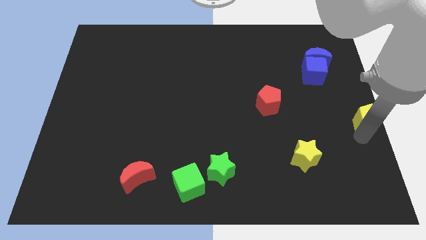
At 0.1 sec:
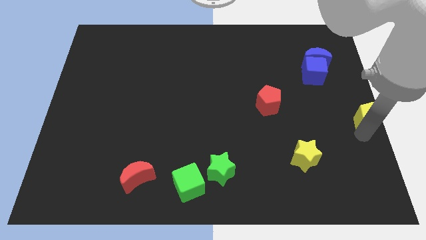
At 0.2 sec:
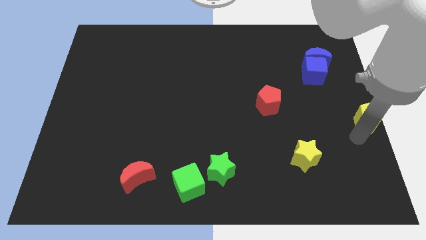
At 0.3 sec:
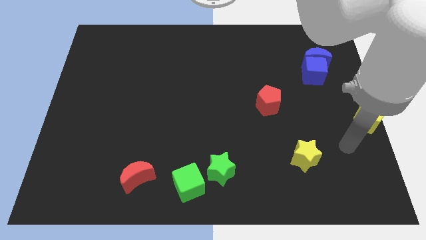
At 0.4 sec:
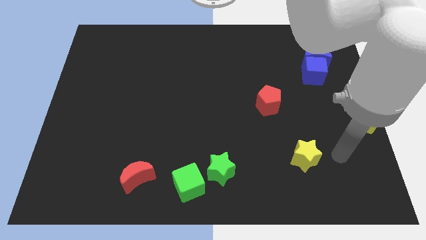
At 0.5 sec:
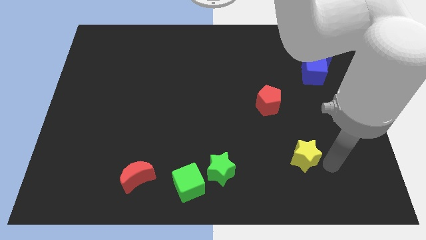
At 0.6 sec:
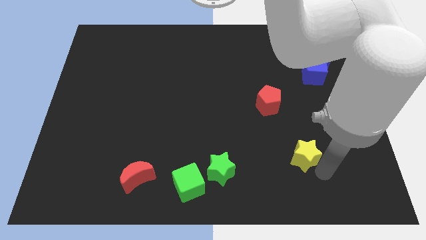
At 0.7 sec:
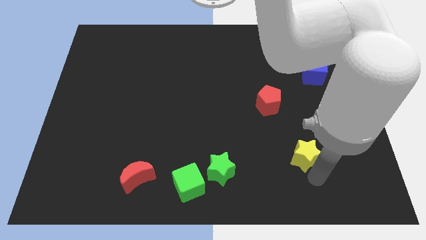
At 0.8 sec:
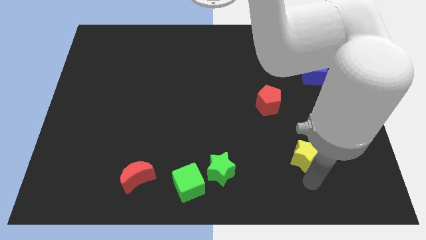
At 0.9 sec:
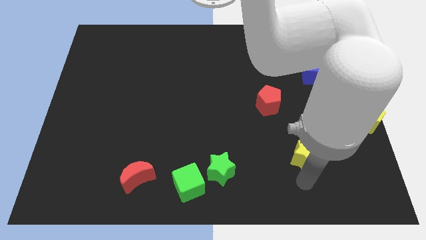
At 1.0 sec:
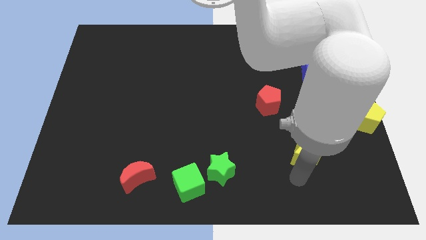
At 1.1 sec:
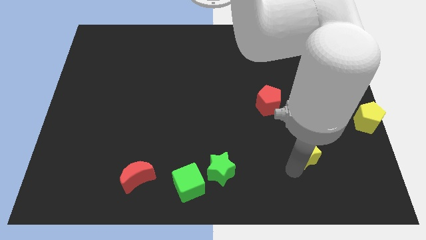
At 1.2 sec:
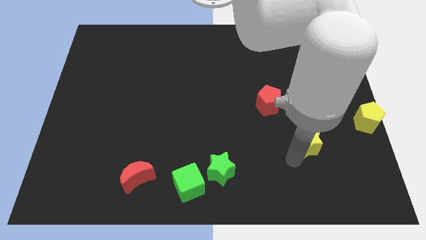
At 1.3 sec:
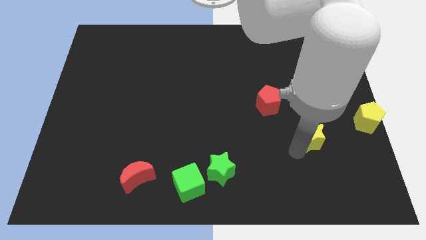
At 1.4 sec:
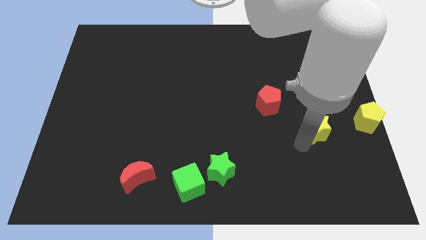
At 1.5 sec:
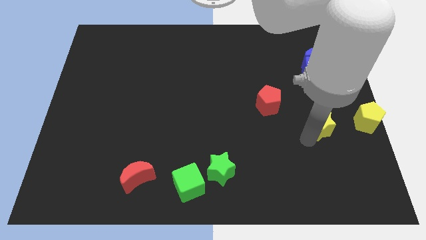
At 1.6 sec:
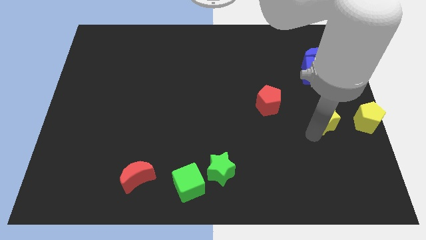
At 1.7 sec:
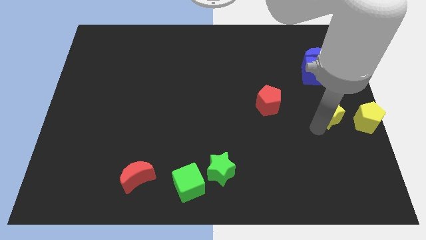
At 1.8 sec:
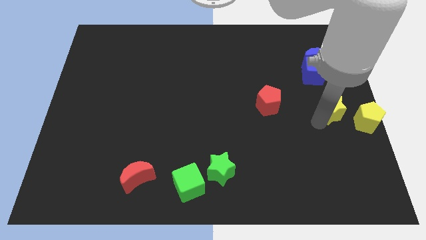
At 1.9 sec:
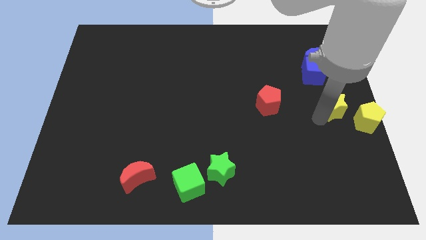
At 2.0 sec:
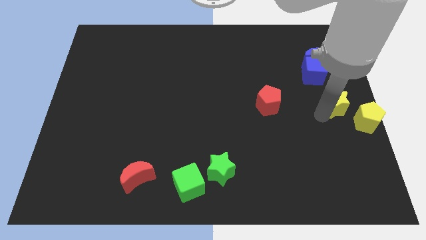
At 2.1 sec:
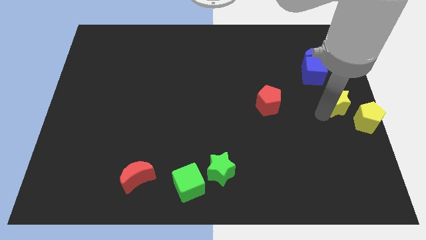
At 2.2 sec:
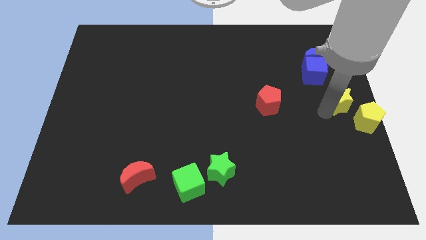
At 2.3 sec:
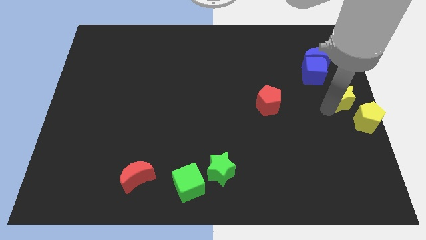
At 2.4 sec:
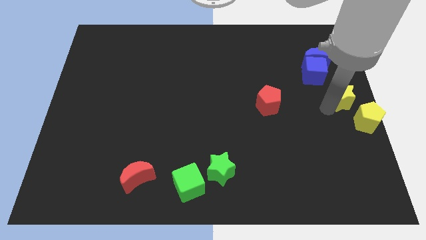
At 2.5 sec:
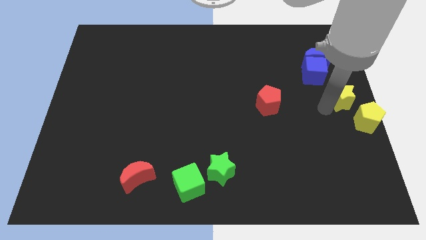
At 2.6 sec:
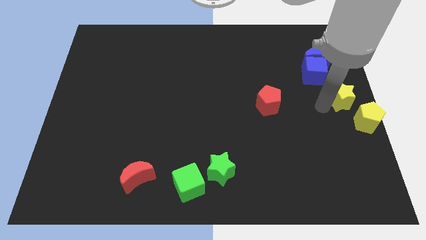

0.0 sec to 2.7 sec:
move the yellow blocks to right center of the board

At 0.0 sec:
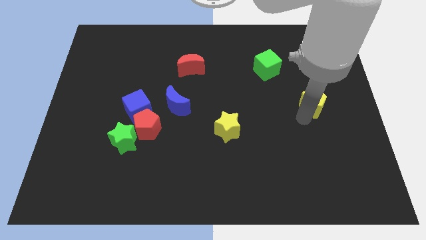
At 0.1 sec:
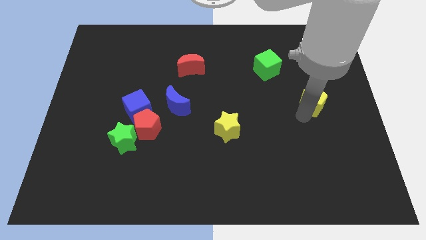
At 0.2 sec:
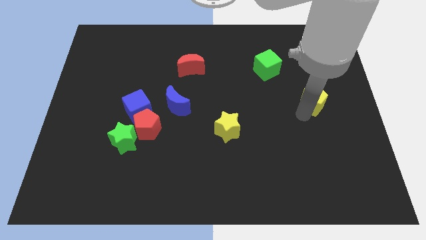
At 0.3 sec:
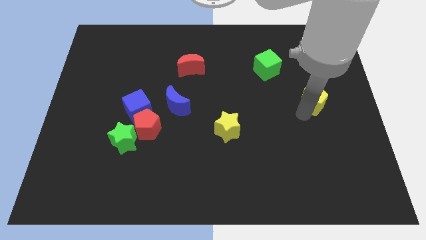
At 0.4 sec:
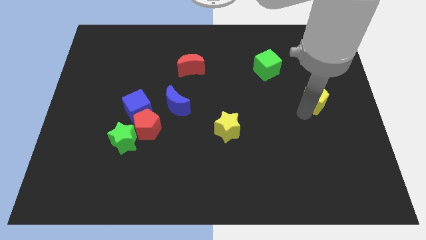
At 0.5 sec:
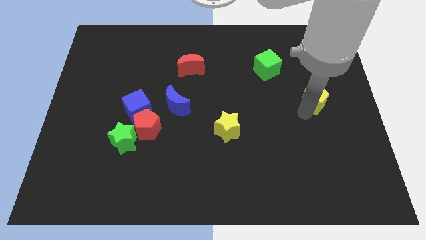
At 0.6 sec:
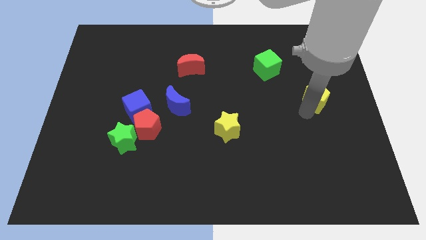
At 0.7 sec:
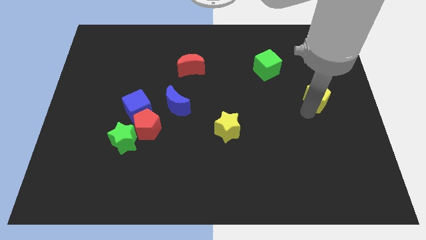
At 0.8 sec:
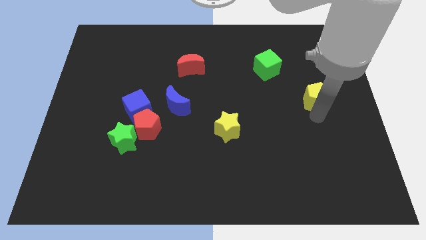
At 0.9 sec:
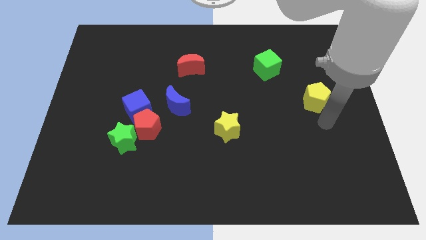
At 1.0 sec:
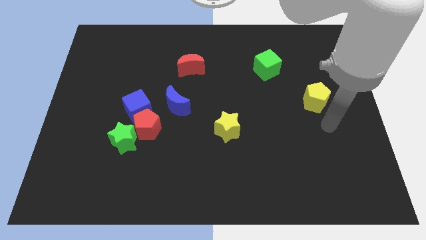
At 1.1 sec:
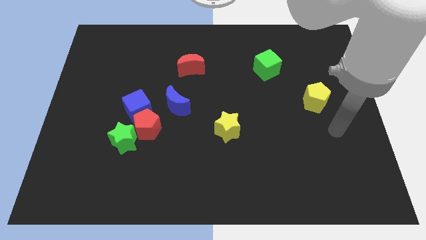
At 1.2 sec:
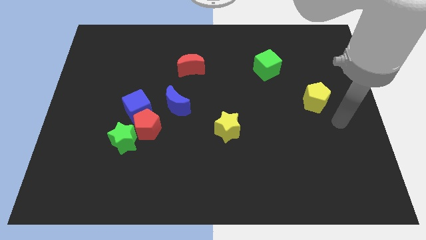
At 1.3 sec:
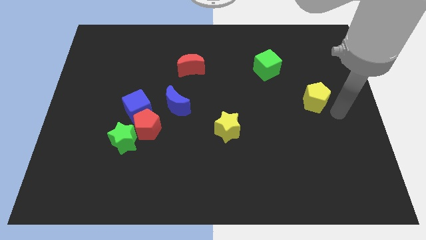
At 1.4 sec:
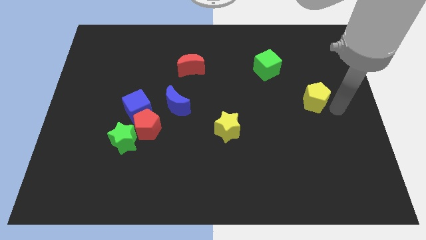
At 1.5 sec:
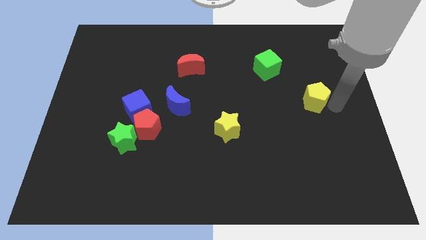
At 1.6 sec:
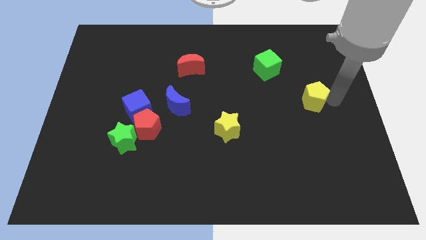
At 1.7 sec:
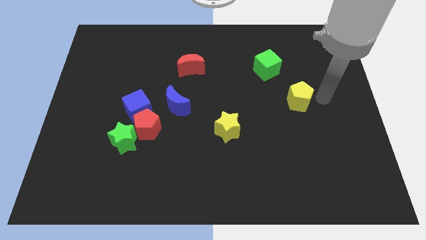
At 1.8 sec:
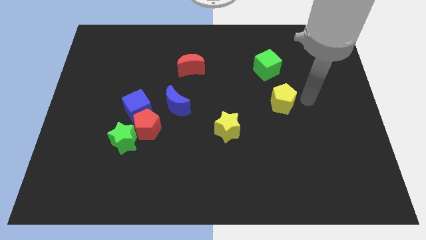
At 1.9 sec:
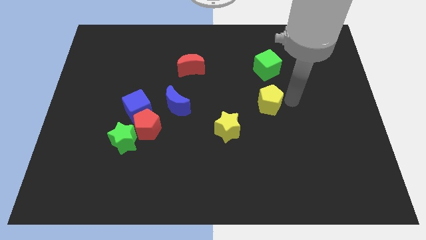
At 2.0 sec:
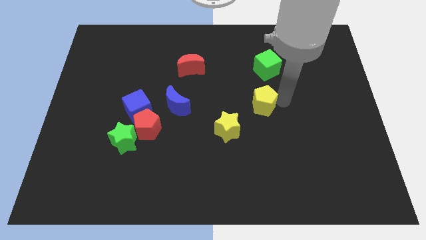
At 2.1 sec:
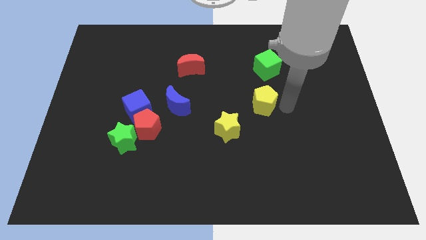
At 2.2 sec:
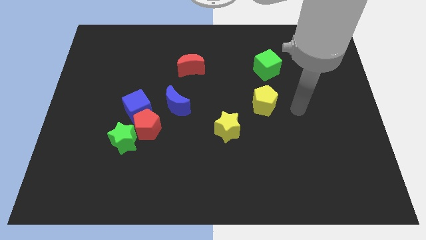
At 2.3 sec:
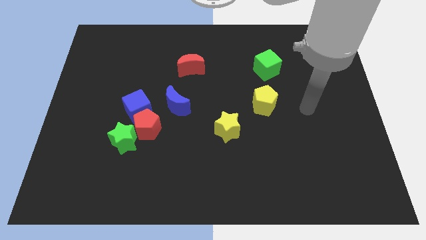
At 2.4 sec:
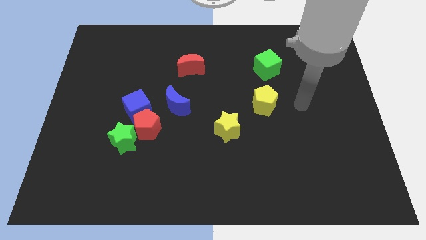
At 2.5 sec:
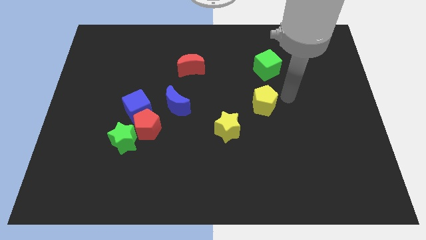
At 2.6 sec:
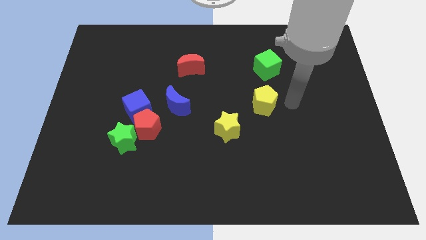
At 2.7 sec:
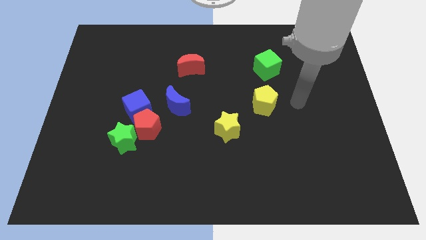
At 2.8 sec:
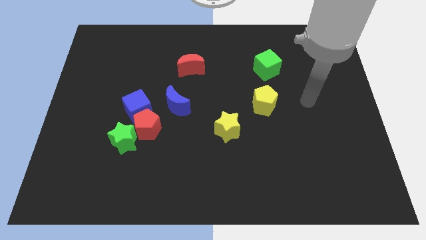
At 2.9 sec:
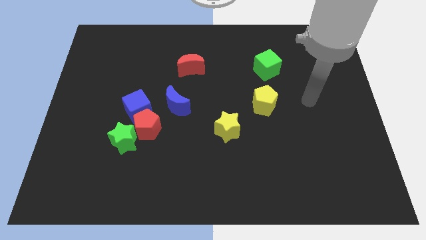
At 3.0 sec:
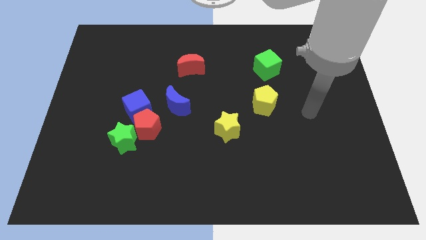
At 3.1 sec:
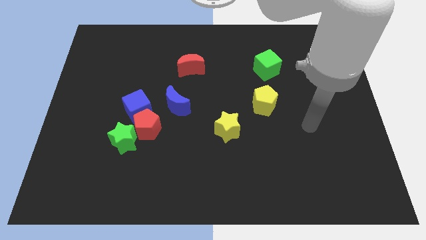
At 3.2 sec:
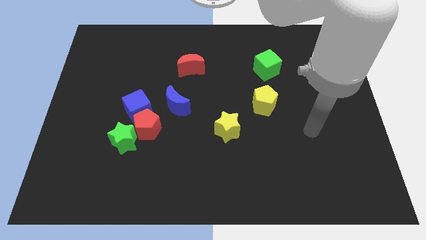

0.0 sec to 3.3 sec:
move the yellow pentagon to the bottom of the green cube

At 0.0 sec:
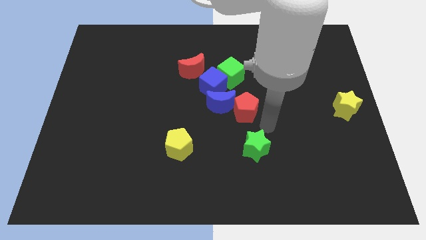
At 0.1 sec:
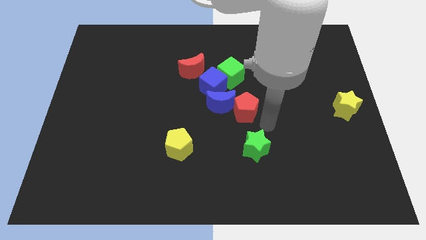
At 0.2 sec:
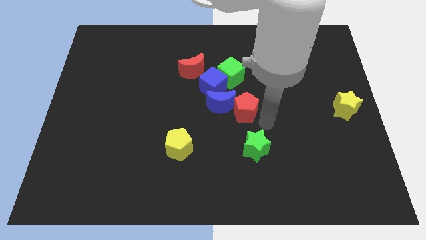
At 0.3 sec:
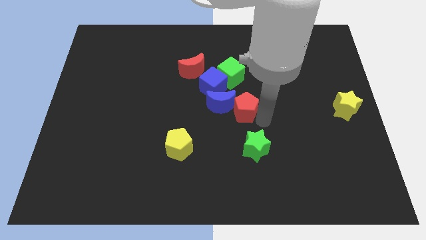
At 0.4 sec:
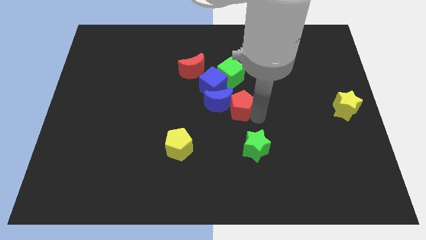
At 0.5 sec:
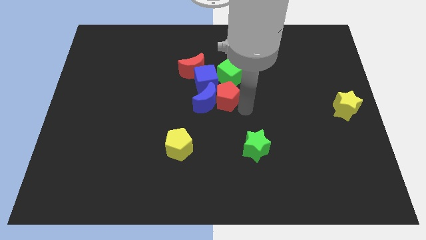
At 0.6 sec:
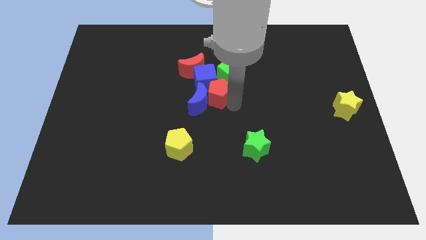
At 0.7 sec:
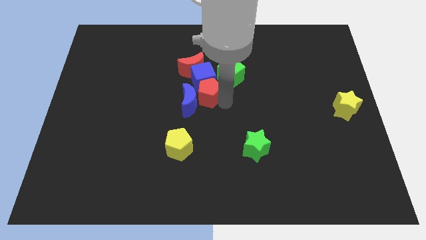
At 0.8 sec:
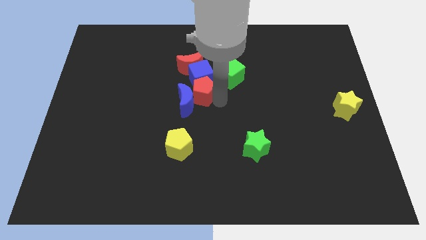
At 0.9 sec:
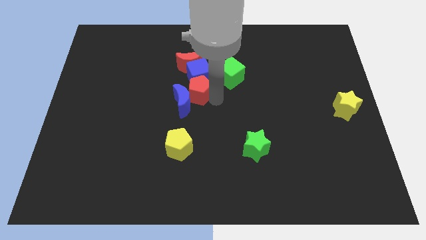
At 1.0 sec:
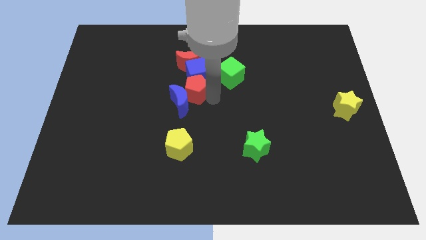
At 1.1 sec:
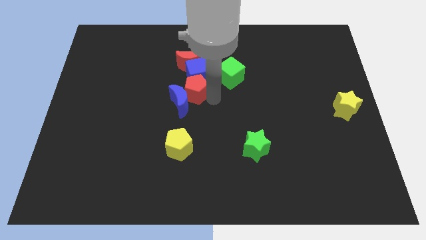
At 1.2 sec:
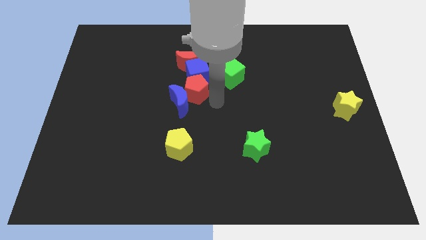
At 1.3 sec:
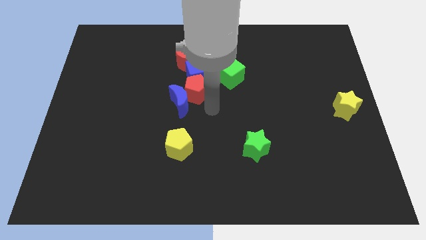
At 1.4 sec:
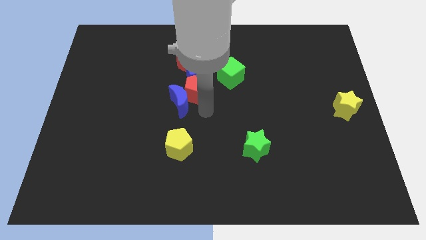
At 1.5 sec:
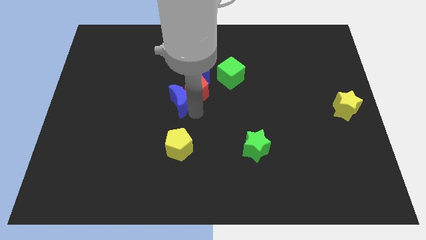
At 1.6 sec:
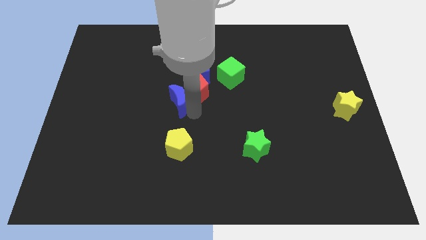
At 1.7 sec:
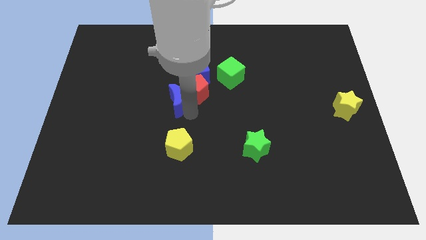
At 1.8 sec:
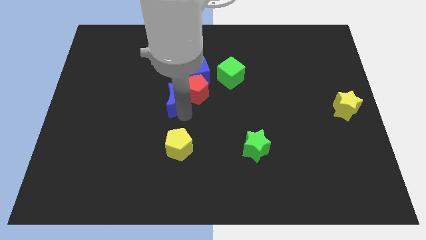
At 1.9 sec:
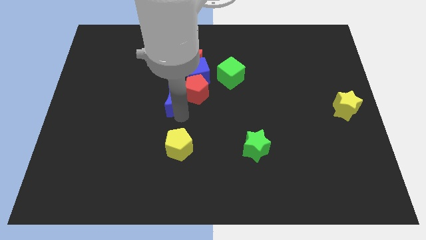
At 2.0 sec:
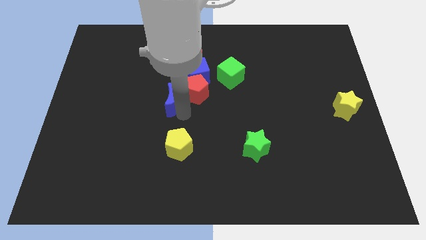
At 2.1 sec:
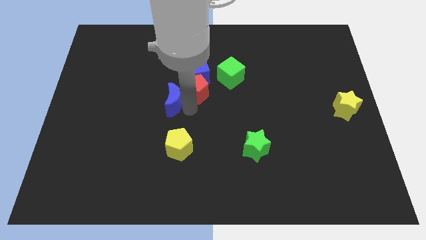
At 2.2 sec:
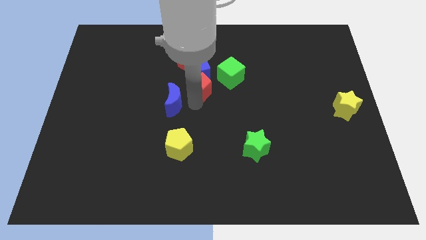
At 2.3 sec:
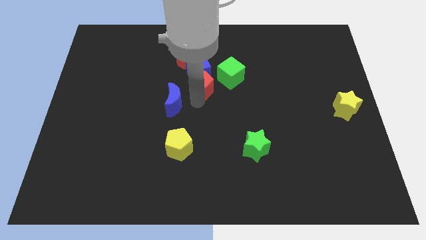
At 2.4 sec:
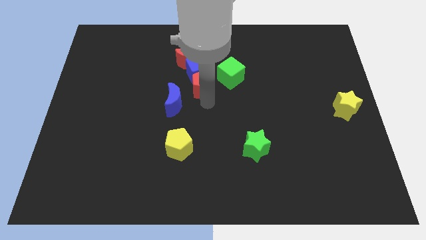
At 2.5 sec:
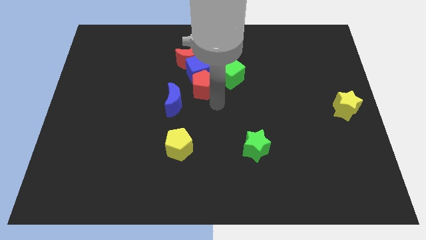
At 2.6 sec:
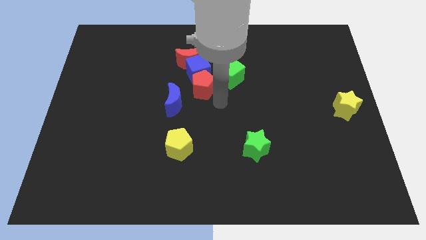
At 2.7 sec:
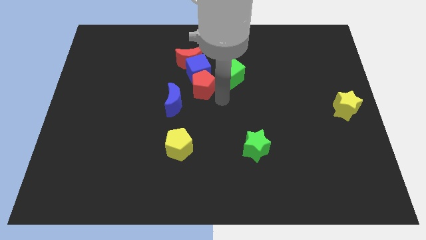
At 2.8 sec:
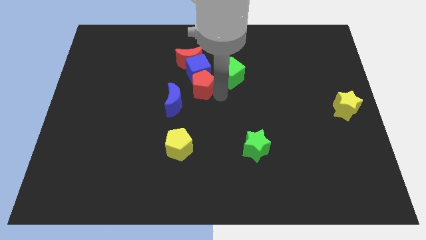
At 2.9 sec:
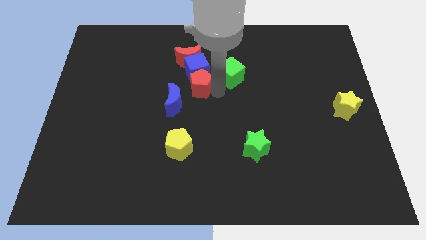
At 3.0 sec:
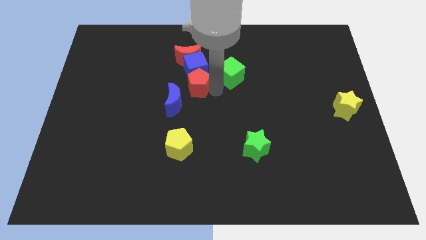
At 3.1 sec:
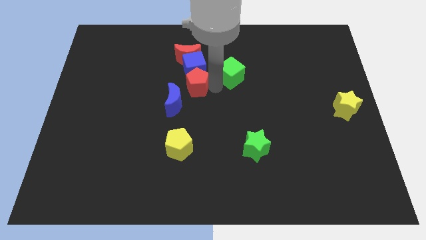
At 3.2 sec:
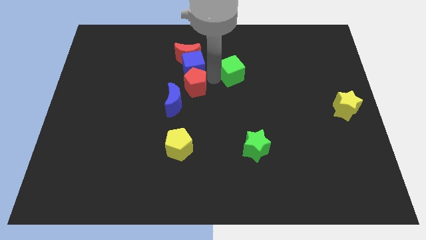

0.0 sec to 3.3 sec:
slide the red pentagon in between the green cube and blue crescent
